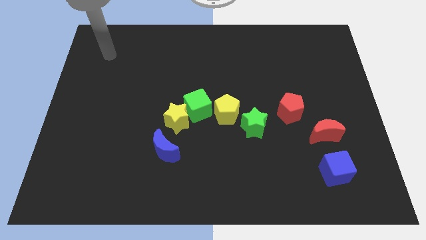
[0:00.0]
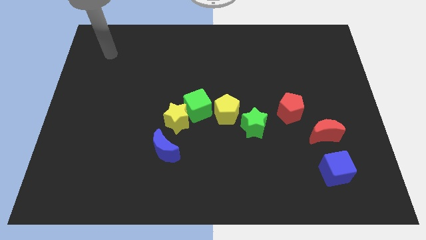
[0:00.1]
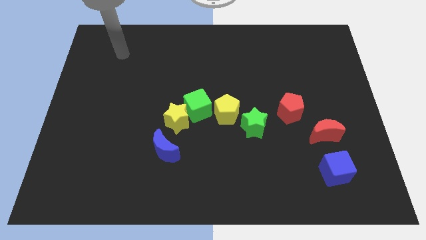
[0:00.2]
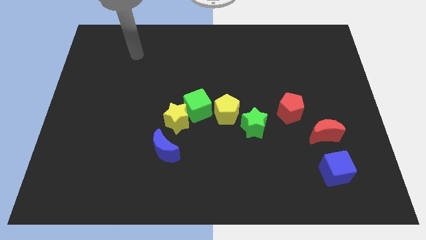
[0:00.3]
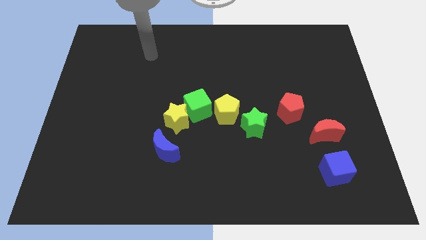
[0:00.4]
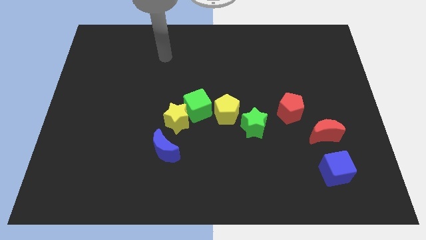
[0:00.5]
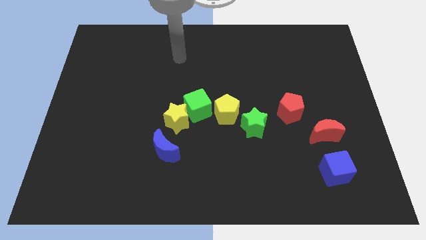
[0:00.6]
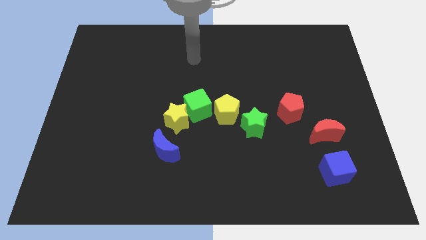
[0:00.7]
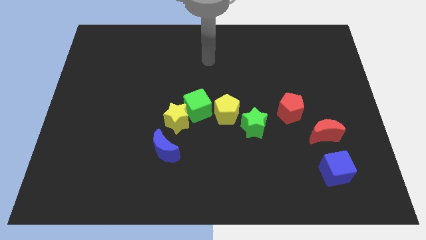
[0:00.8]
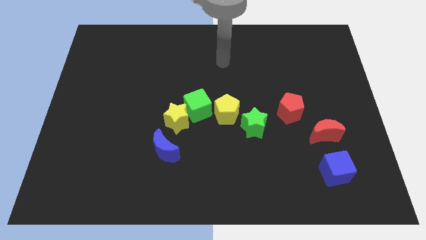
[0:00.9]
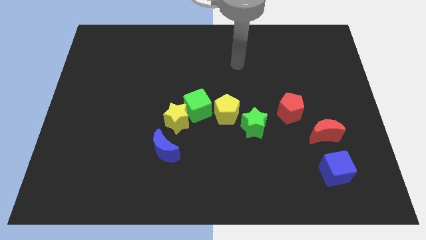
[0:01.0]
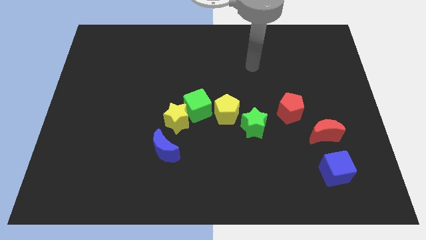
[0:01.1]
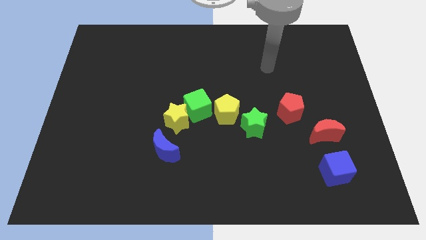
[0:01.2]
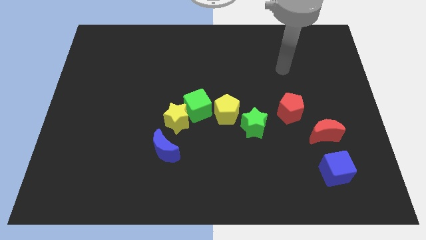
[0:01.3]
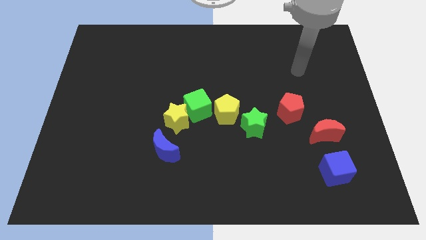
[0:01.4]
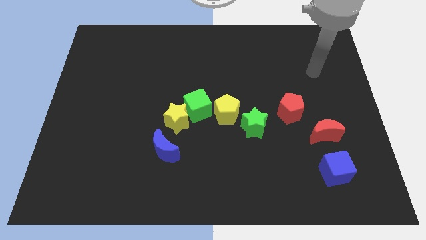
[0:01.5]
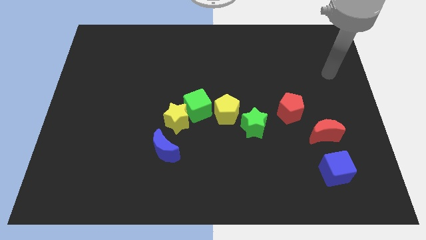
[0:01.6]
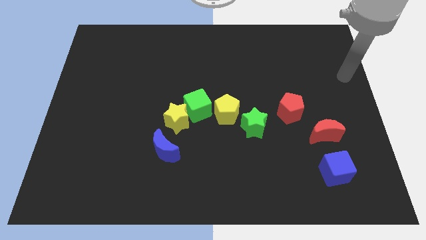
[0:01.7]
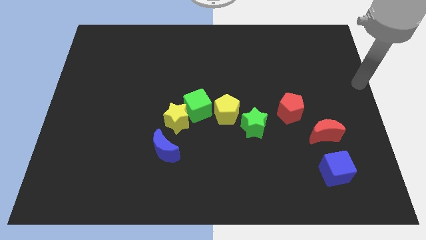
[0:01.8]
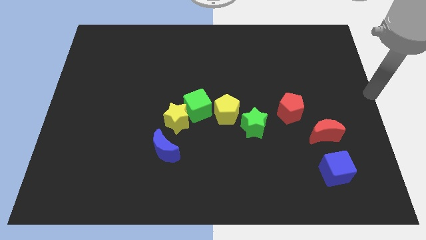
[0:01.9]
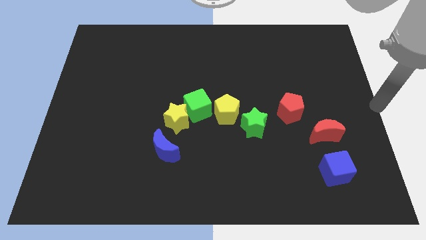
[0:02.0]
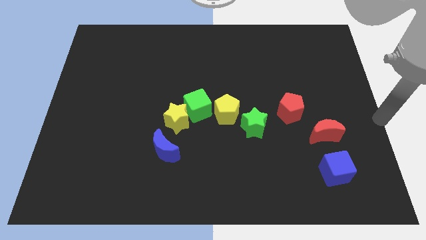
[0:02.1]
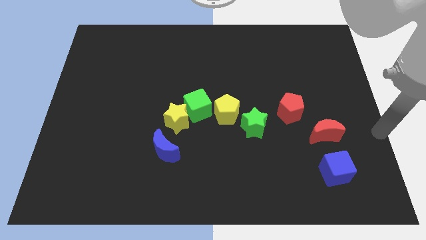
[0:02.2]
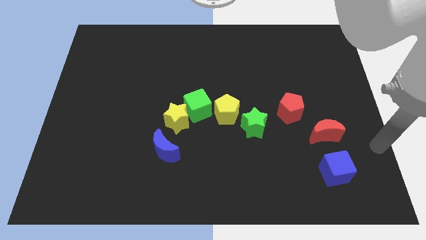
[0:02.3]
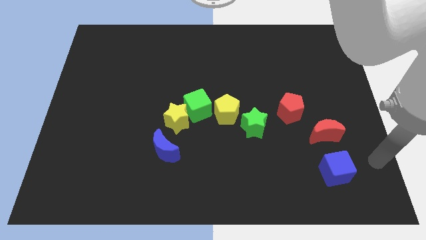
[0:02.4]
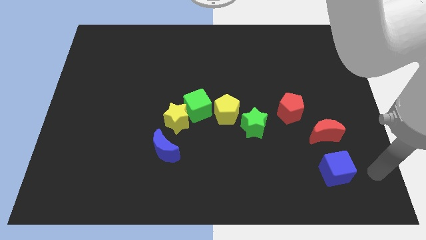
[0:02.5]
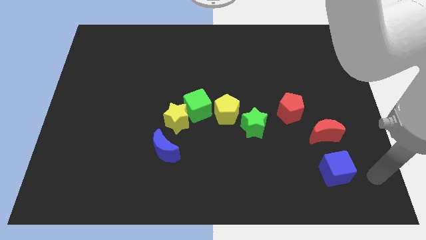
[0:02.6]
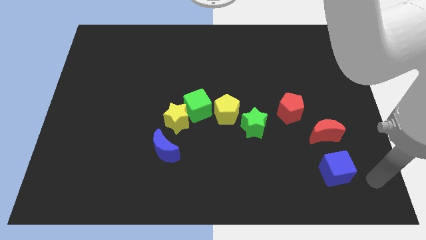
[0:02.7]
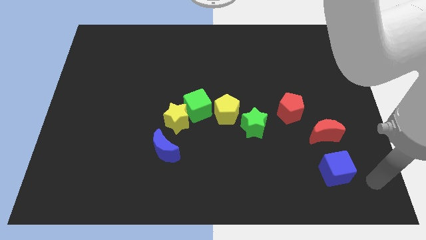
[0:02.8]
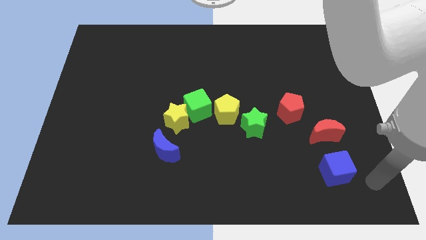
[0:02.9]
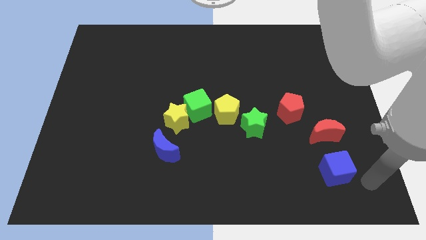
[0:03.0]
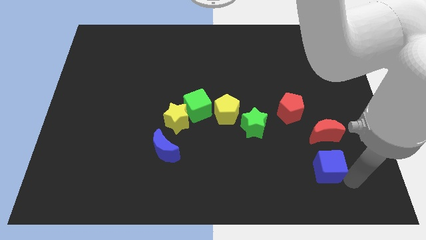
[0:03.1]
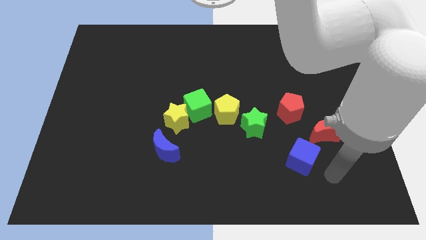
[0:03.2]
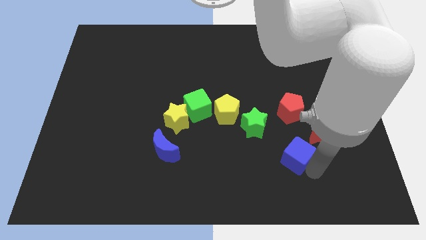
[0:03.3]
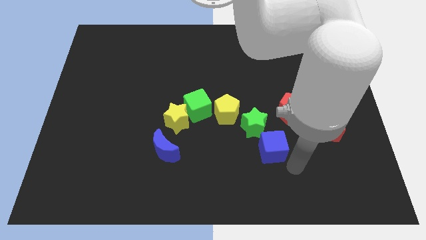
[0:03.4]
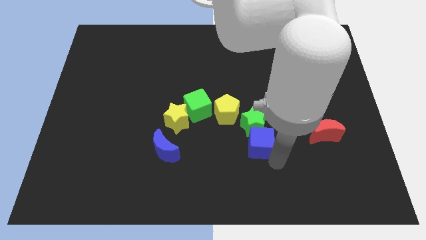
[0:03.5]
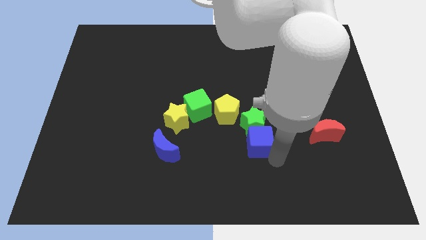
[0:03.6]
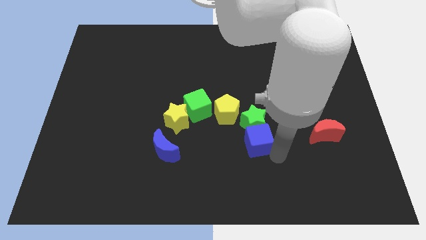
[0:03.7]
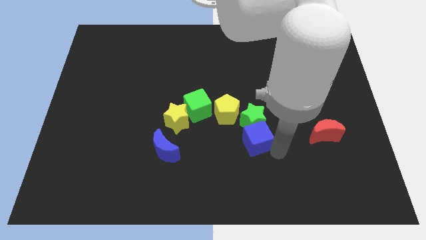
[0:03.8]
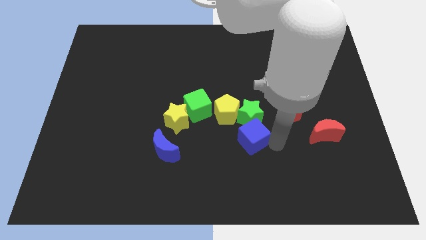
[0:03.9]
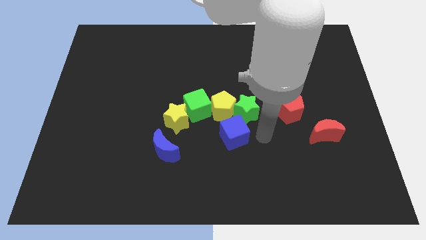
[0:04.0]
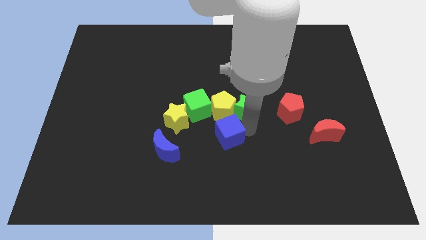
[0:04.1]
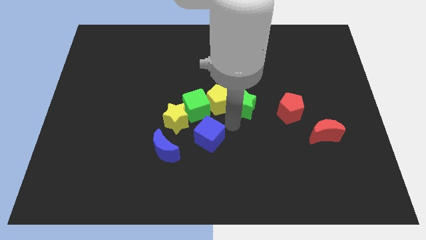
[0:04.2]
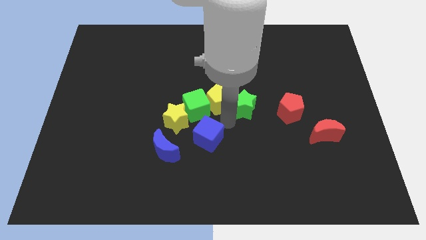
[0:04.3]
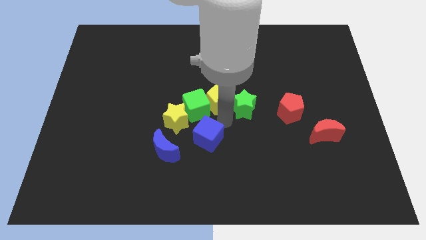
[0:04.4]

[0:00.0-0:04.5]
move the blue cube towards the center if the board

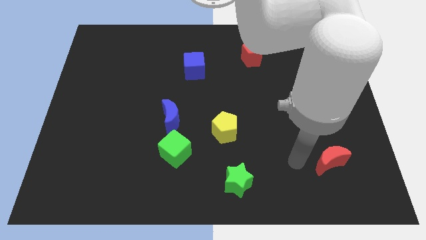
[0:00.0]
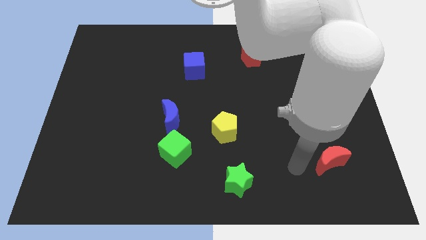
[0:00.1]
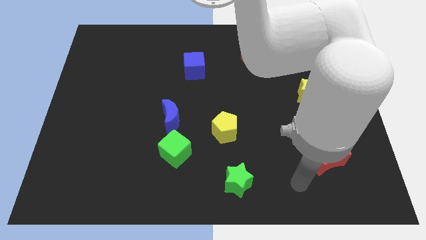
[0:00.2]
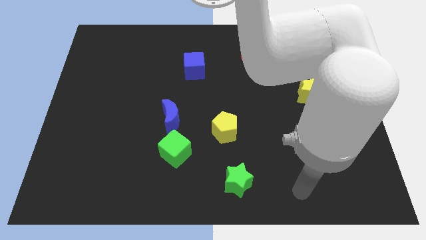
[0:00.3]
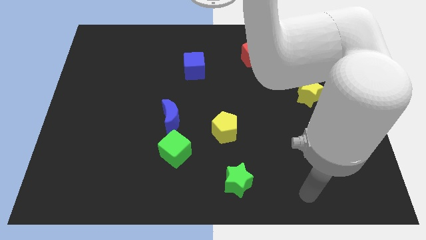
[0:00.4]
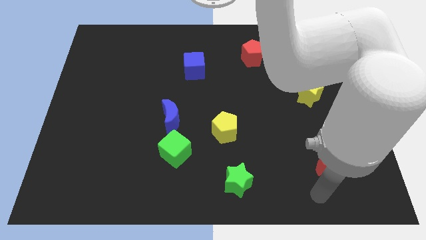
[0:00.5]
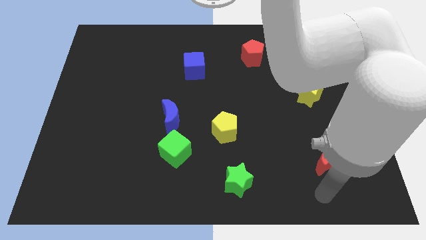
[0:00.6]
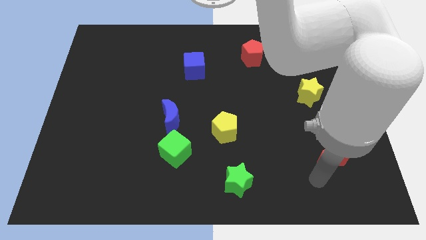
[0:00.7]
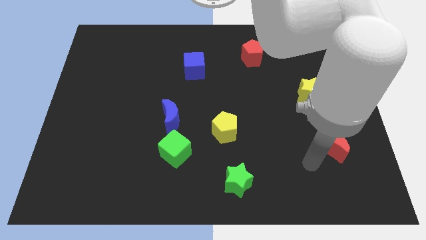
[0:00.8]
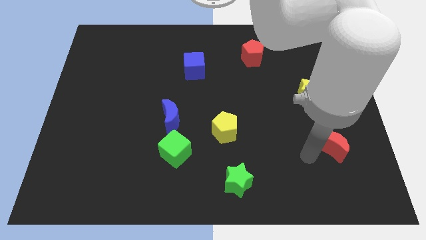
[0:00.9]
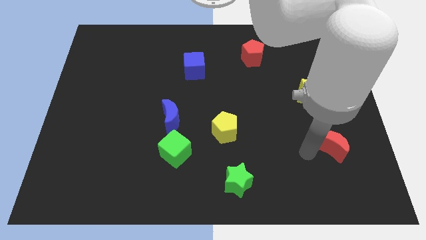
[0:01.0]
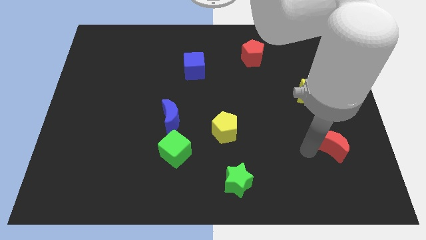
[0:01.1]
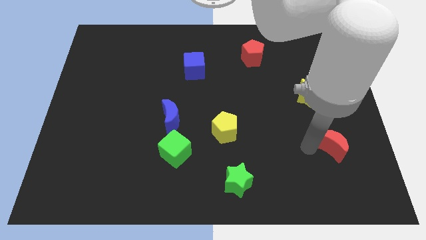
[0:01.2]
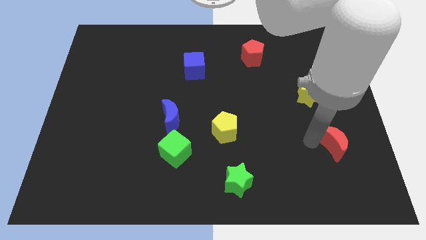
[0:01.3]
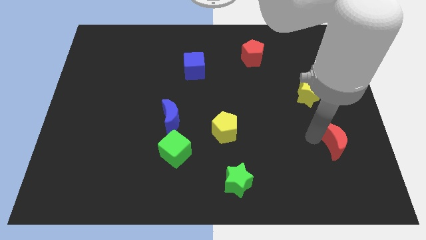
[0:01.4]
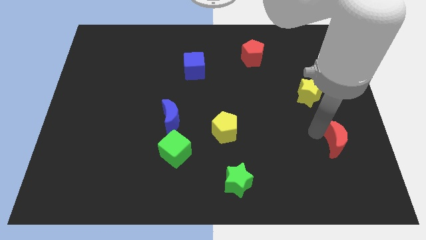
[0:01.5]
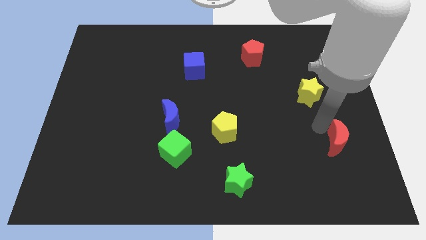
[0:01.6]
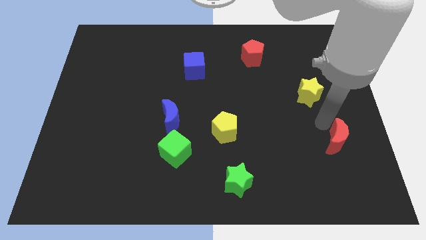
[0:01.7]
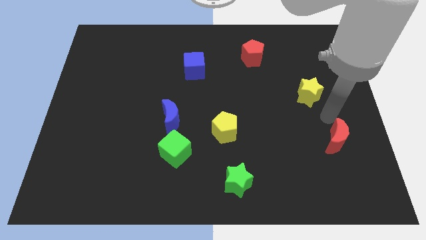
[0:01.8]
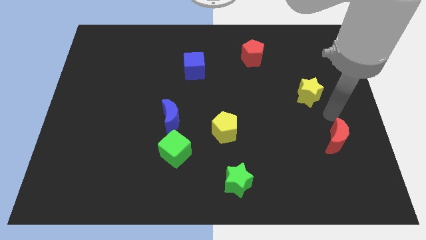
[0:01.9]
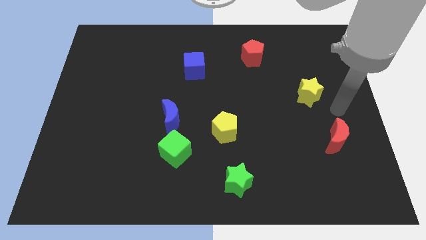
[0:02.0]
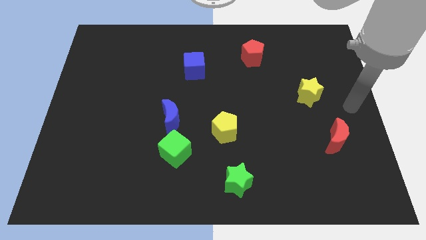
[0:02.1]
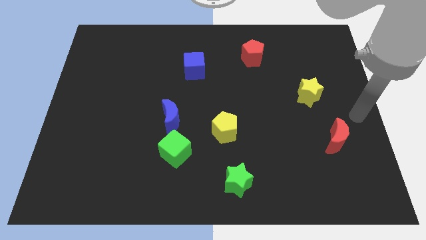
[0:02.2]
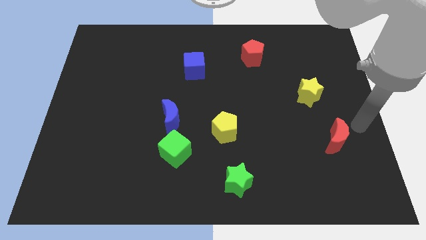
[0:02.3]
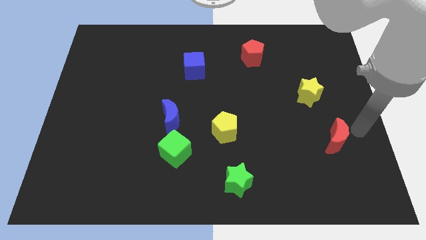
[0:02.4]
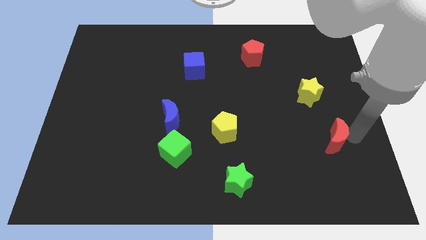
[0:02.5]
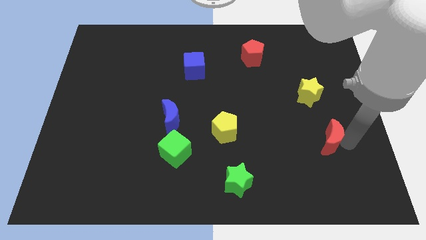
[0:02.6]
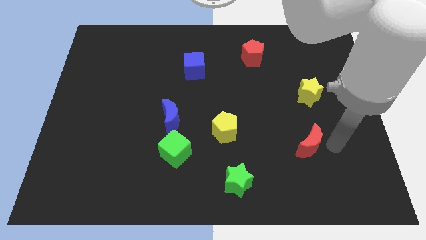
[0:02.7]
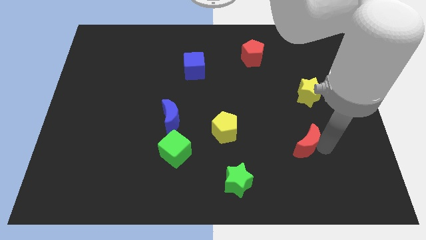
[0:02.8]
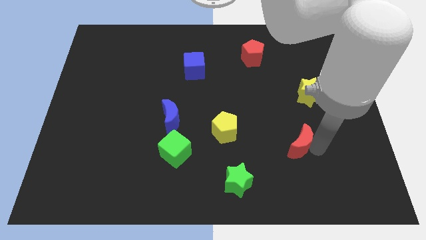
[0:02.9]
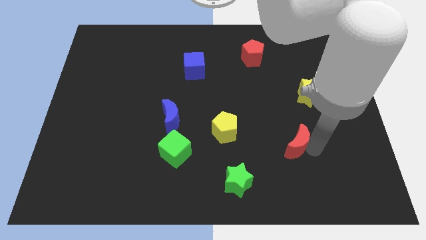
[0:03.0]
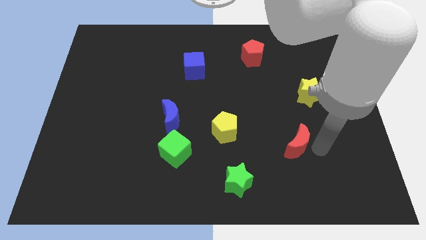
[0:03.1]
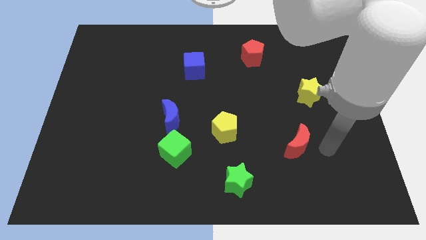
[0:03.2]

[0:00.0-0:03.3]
place the red moon diagonally top right to the green star

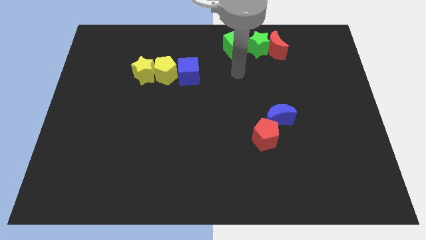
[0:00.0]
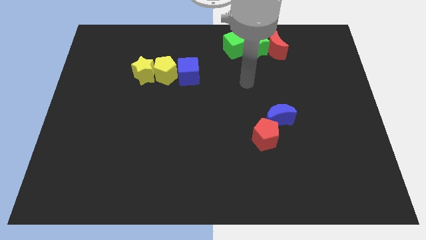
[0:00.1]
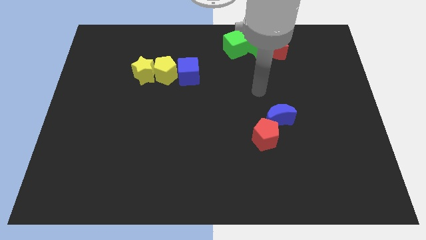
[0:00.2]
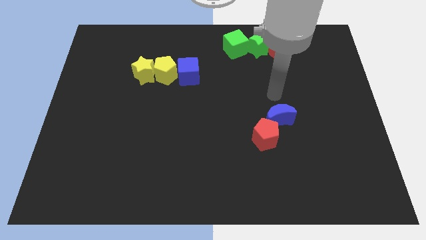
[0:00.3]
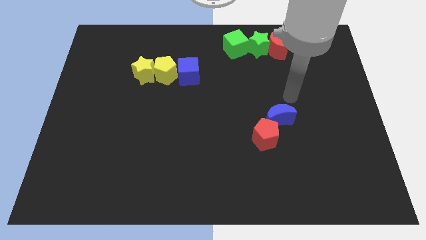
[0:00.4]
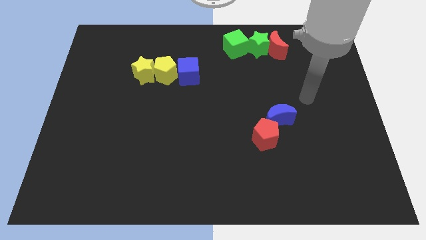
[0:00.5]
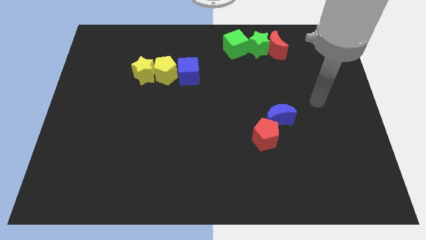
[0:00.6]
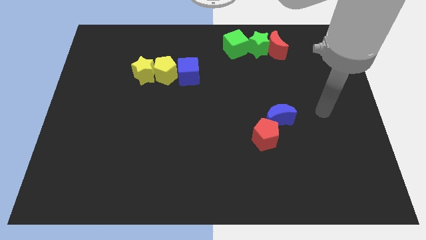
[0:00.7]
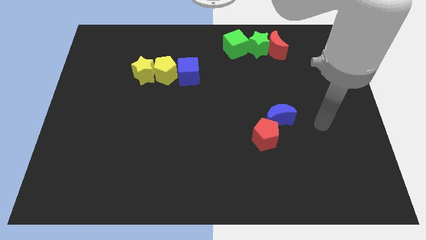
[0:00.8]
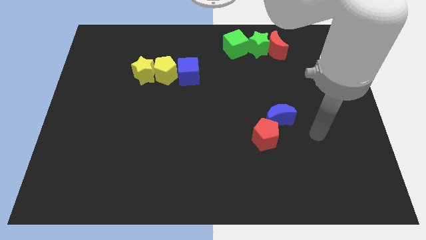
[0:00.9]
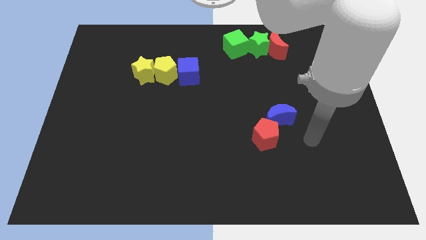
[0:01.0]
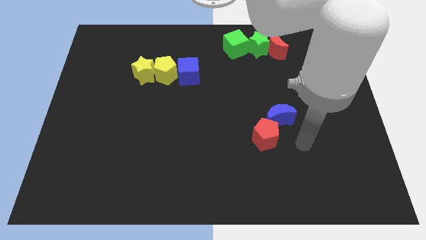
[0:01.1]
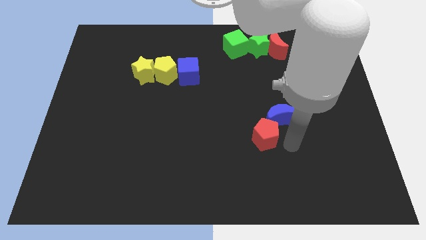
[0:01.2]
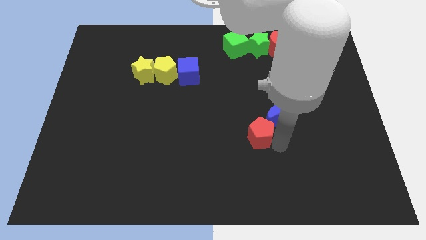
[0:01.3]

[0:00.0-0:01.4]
point the arm to the right of the red pentagon
